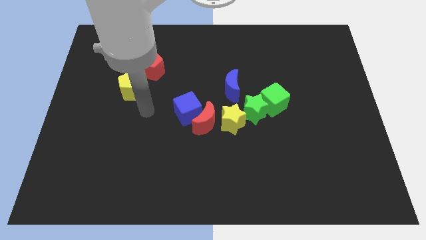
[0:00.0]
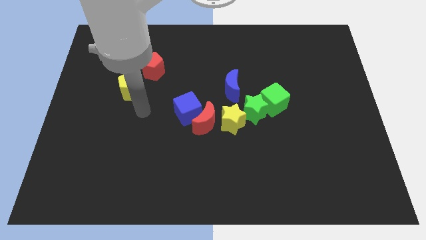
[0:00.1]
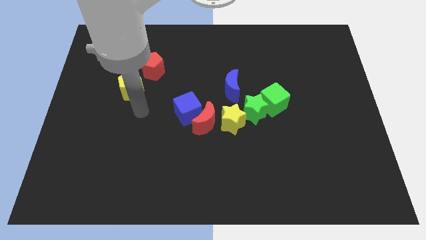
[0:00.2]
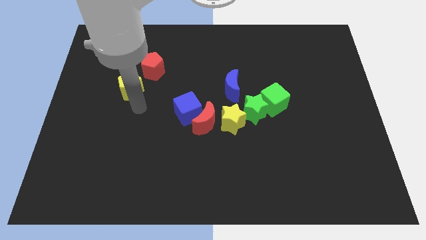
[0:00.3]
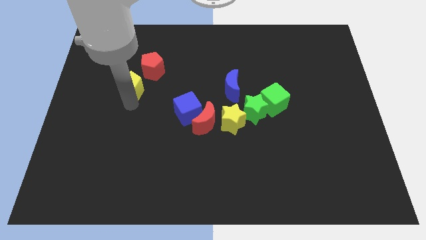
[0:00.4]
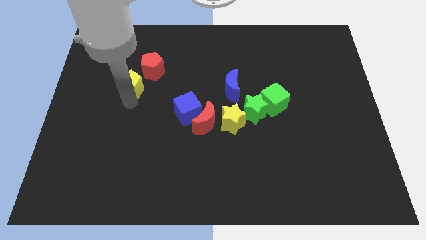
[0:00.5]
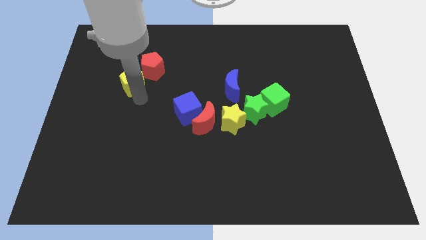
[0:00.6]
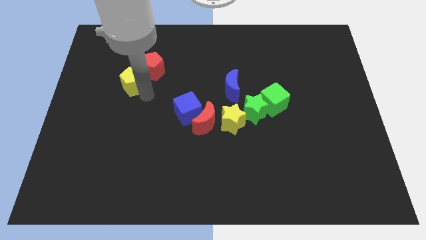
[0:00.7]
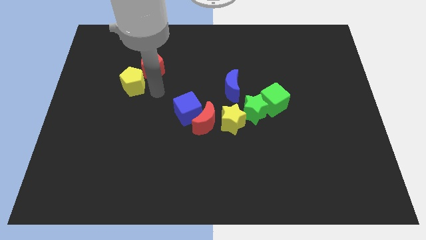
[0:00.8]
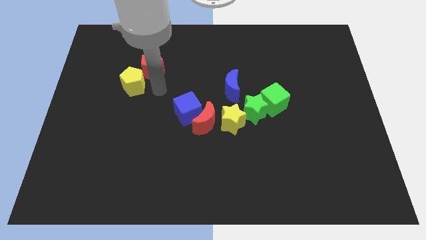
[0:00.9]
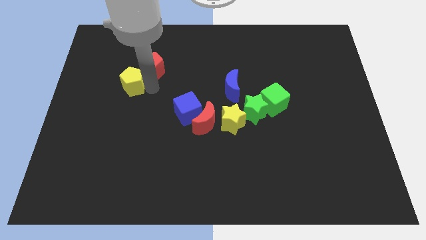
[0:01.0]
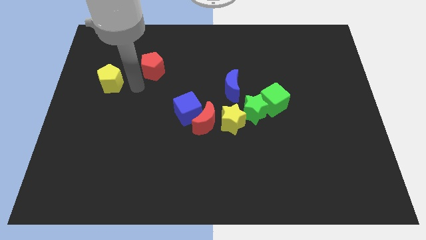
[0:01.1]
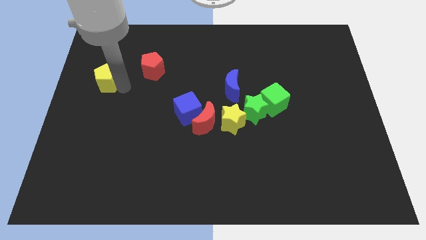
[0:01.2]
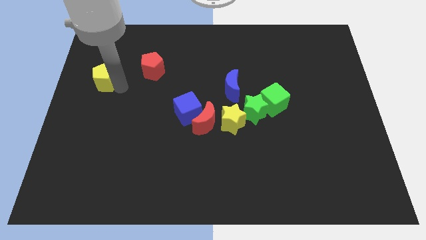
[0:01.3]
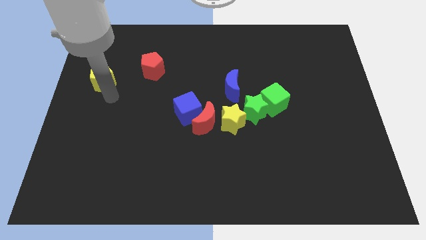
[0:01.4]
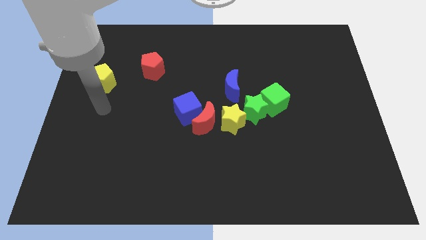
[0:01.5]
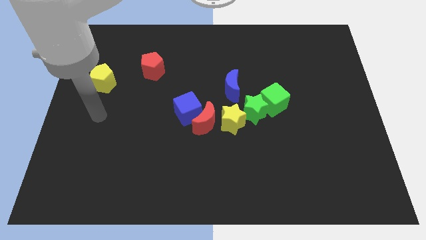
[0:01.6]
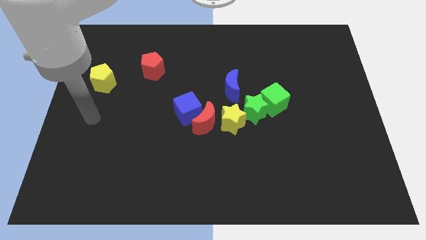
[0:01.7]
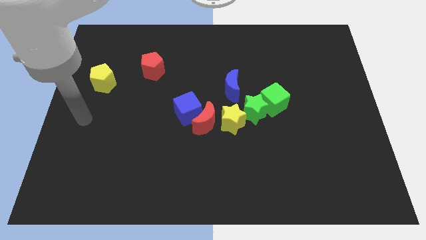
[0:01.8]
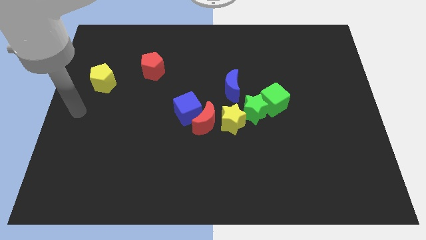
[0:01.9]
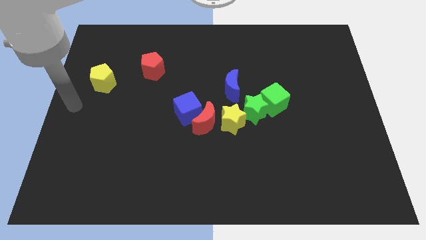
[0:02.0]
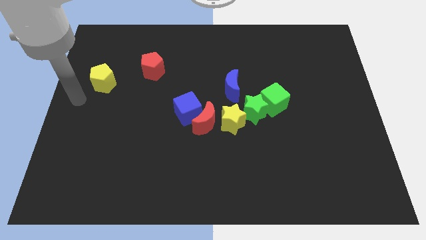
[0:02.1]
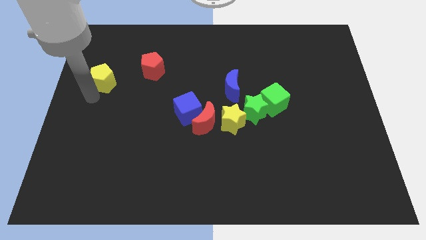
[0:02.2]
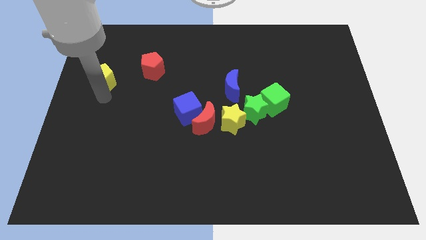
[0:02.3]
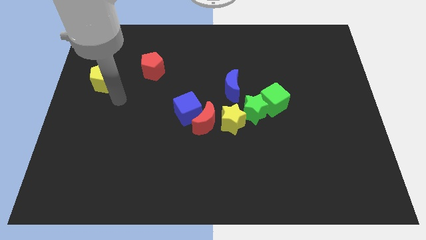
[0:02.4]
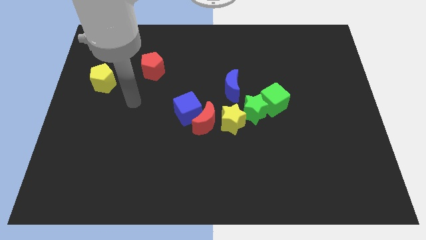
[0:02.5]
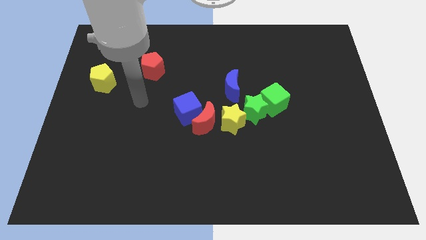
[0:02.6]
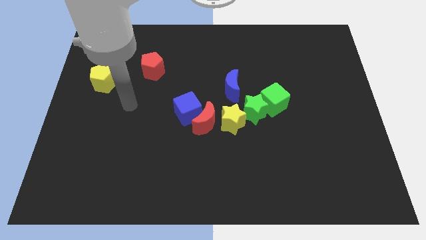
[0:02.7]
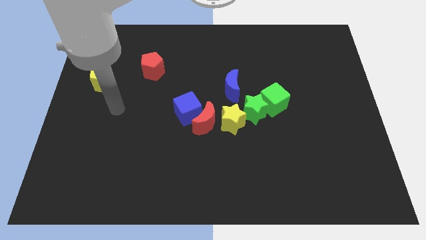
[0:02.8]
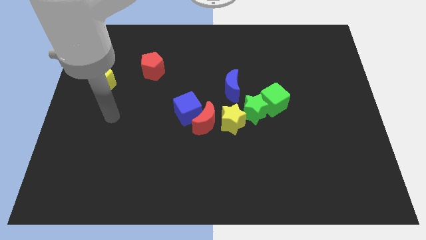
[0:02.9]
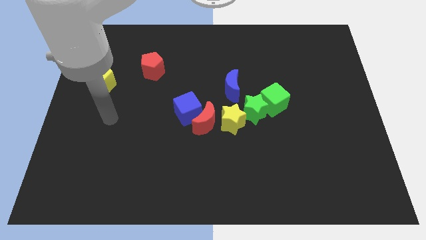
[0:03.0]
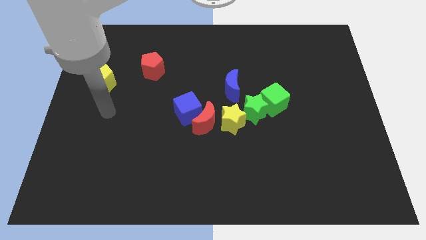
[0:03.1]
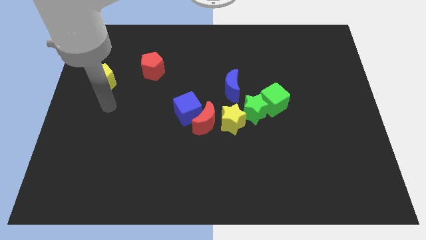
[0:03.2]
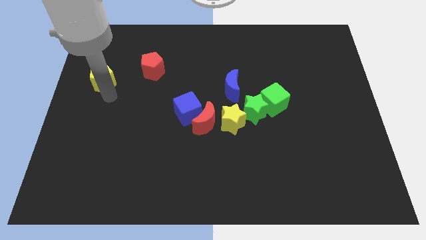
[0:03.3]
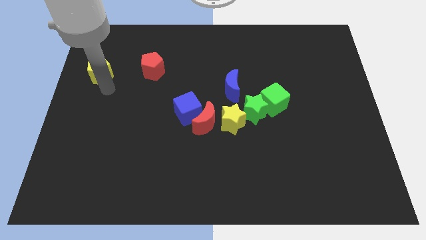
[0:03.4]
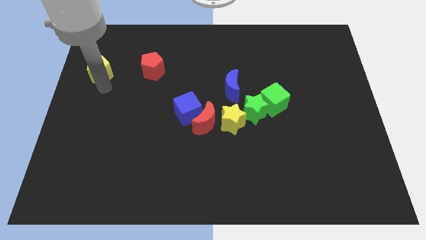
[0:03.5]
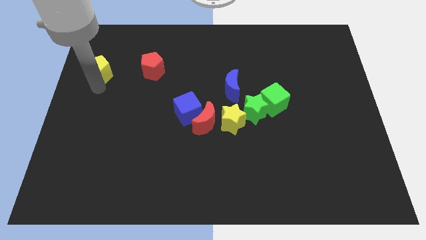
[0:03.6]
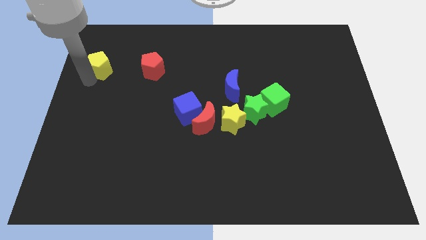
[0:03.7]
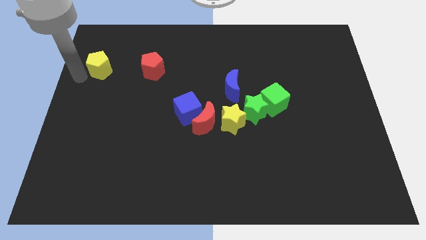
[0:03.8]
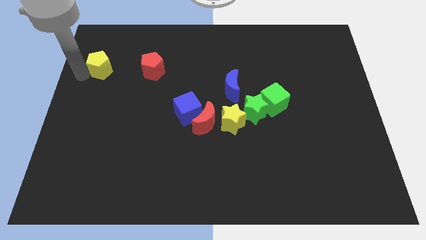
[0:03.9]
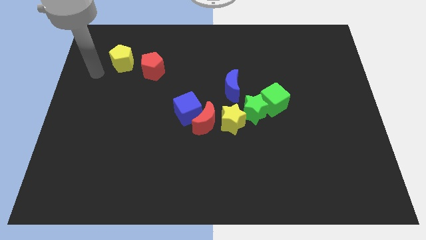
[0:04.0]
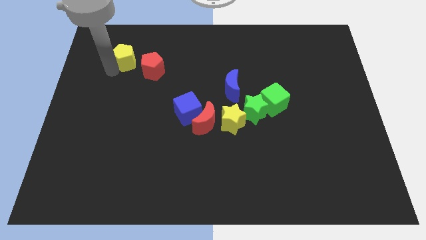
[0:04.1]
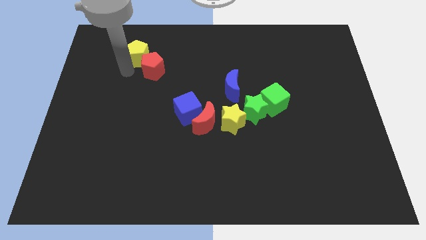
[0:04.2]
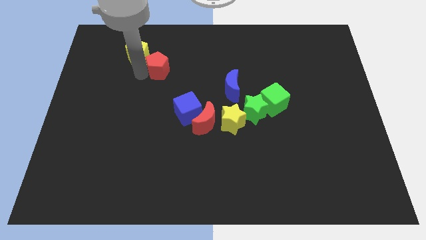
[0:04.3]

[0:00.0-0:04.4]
move the yellow pentagon to the left side of the red pentagon

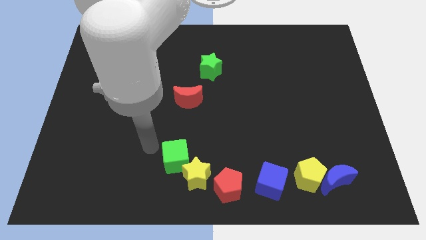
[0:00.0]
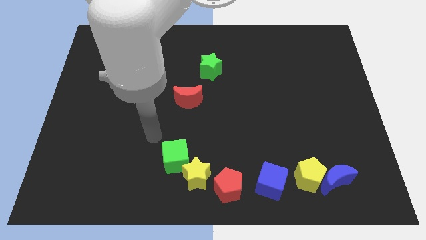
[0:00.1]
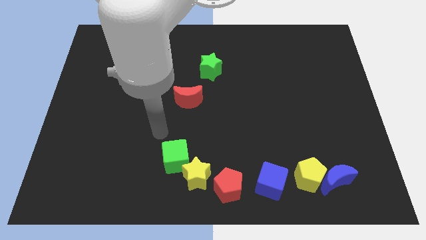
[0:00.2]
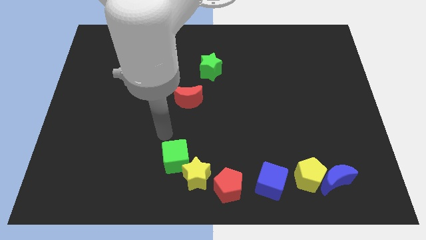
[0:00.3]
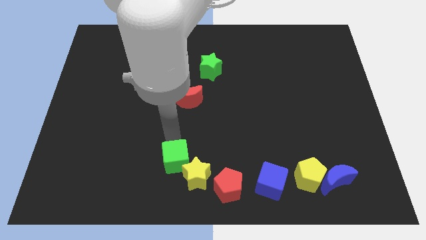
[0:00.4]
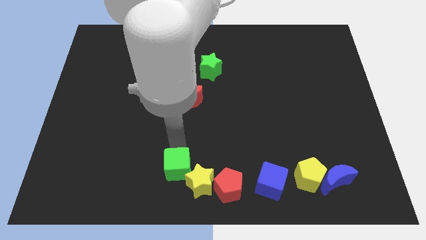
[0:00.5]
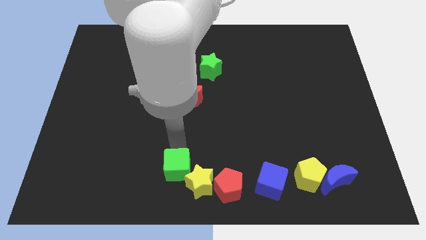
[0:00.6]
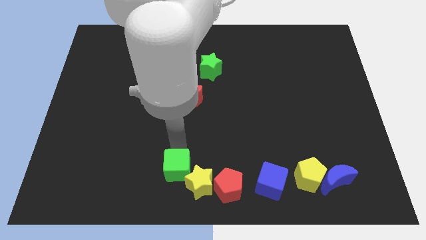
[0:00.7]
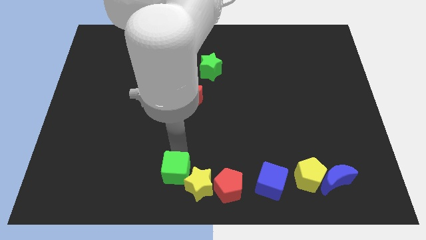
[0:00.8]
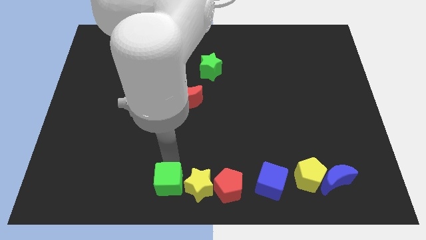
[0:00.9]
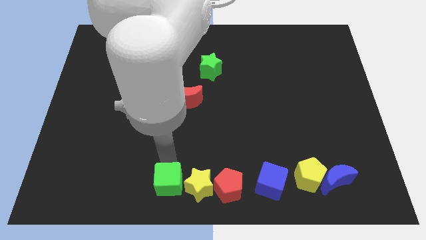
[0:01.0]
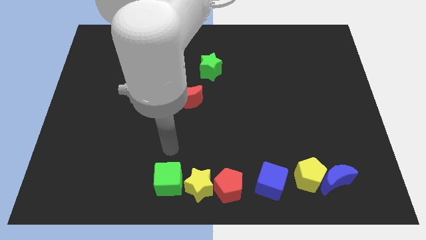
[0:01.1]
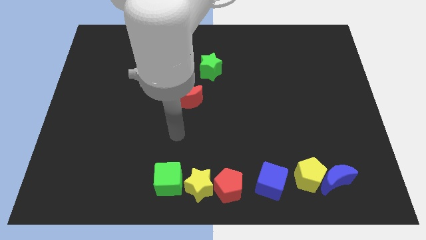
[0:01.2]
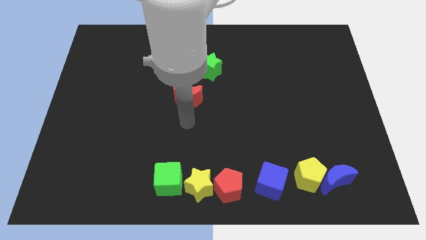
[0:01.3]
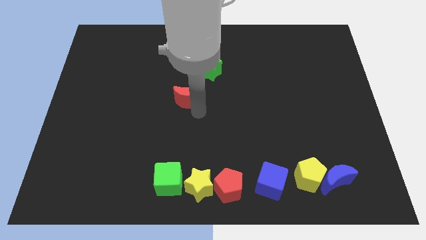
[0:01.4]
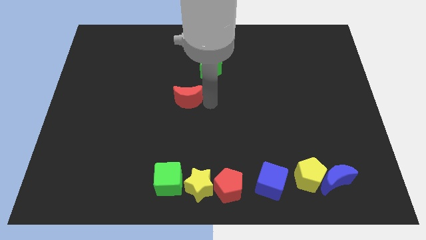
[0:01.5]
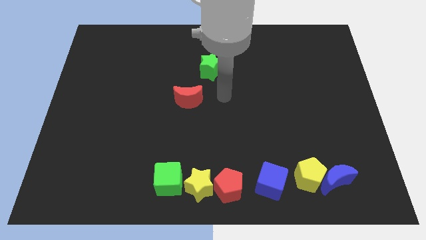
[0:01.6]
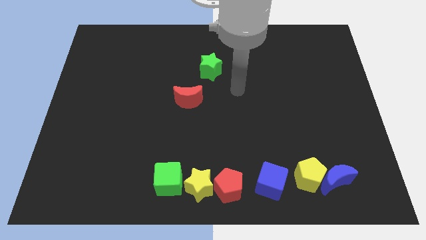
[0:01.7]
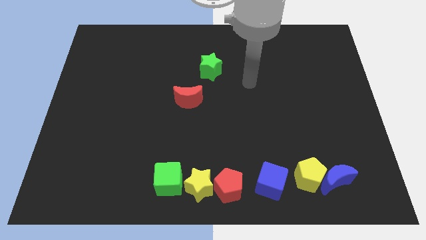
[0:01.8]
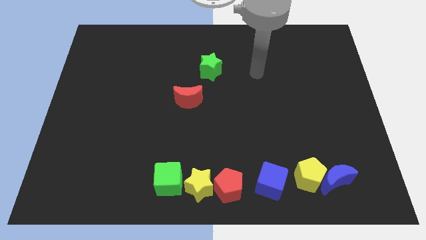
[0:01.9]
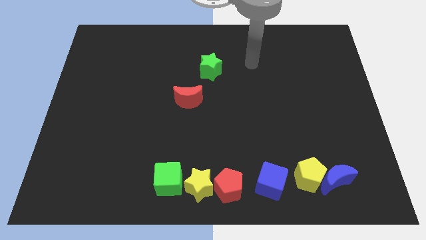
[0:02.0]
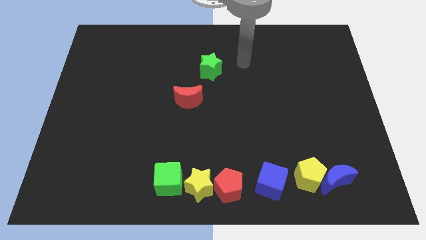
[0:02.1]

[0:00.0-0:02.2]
drag the green cube close to the yellow star

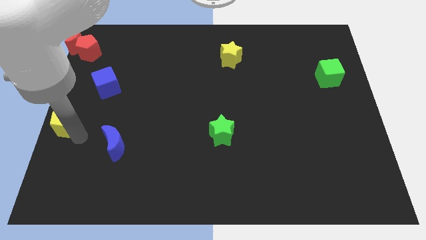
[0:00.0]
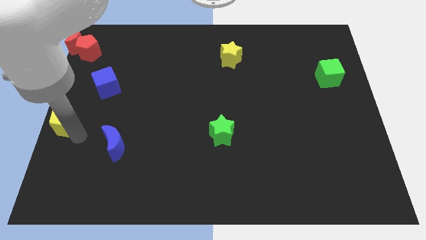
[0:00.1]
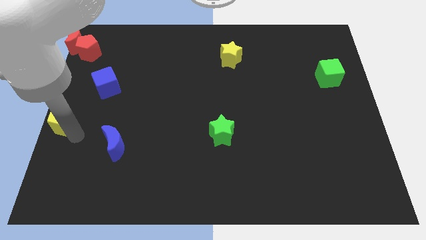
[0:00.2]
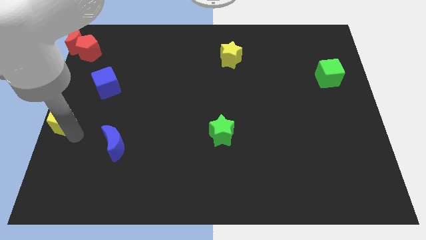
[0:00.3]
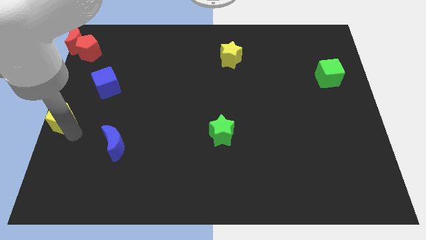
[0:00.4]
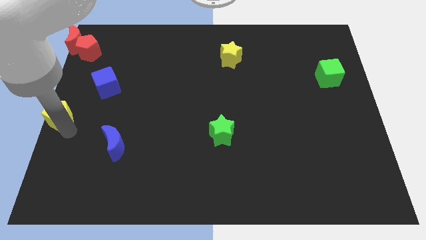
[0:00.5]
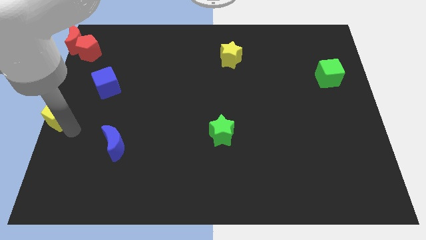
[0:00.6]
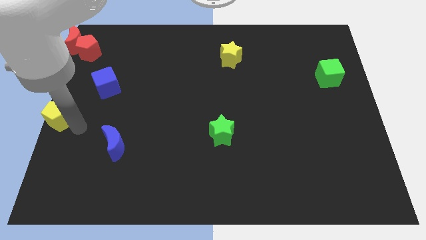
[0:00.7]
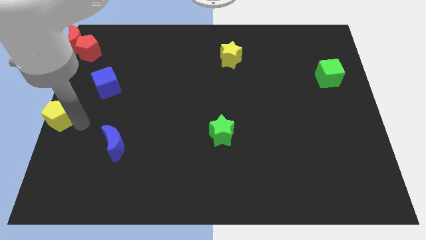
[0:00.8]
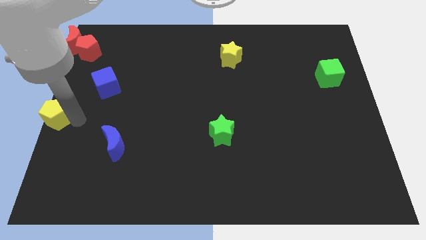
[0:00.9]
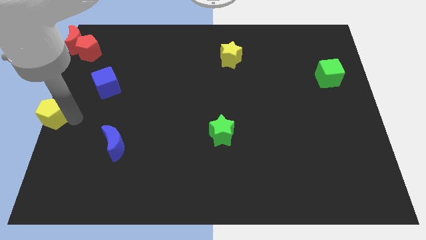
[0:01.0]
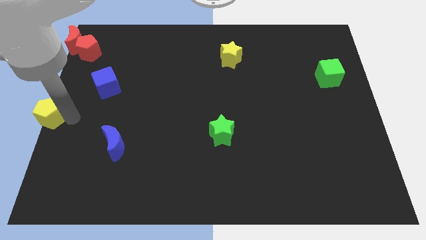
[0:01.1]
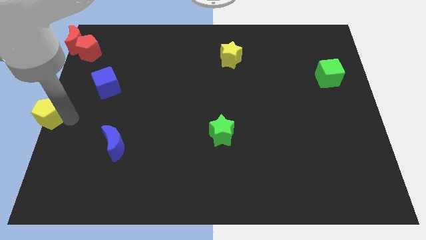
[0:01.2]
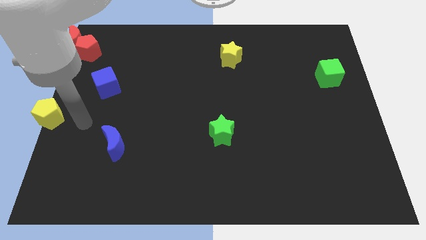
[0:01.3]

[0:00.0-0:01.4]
slide the yellow pentagon to the center left

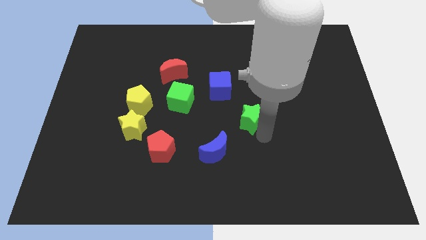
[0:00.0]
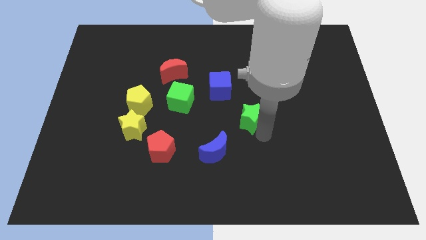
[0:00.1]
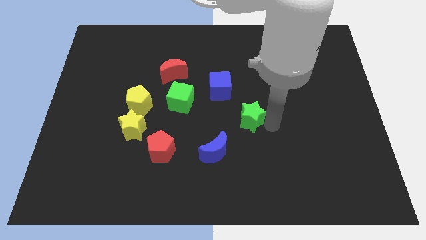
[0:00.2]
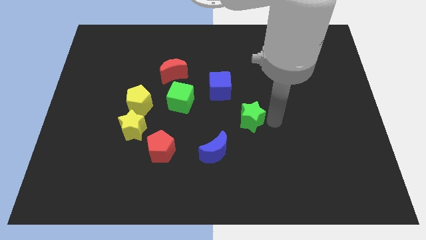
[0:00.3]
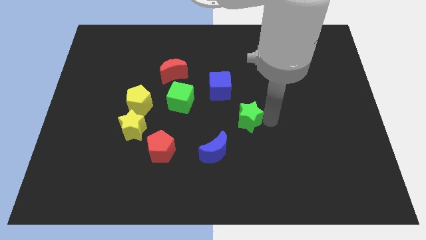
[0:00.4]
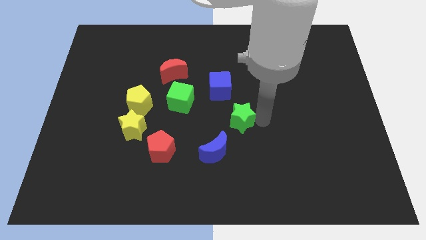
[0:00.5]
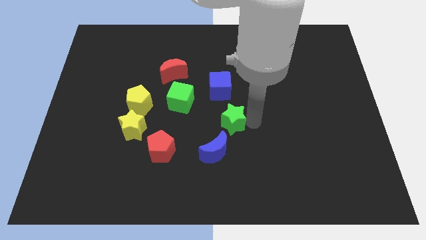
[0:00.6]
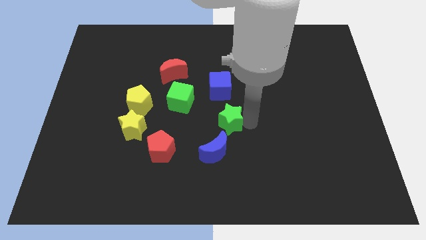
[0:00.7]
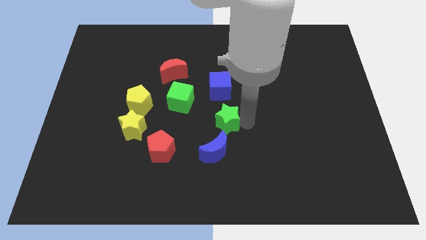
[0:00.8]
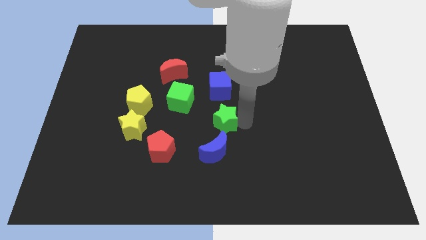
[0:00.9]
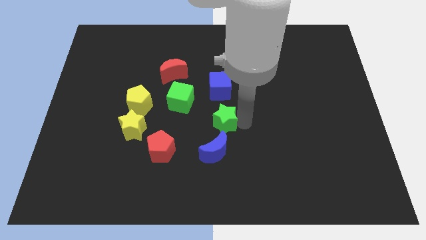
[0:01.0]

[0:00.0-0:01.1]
place the green star in between two blue blocks
